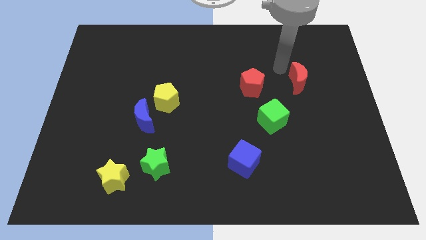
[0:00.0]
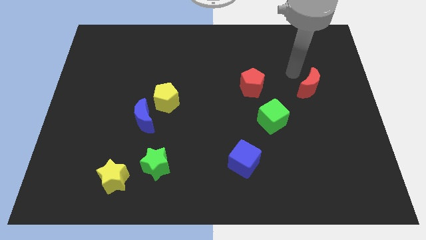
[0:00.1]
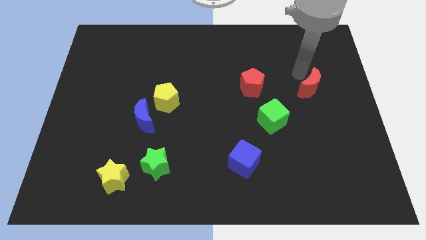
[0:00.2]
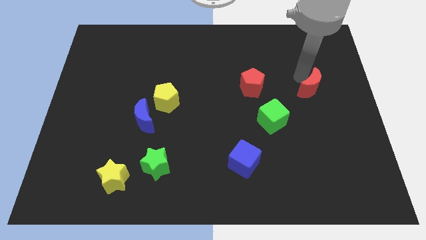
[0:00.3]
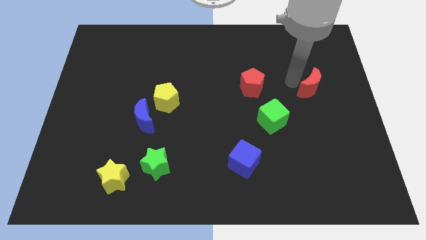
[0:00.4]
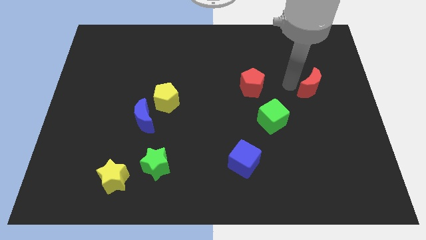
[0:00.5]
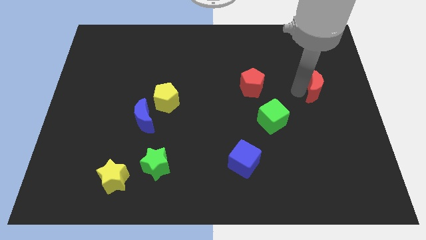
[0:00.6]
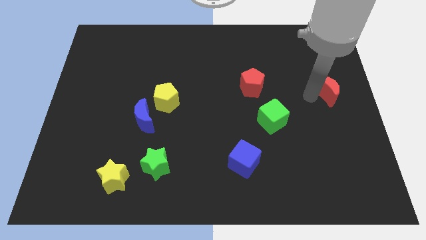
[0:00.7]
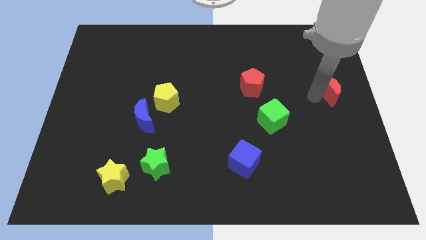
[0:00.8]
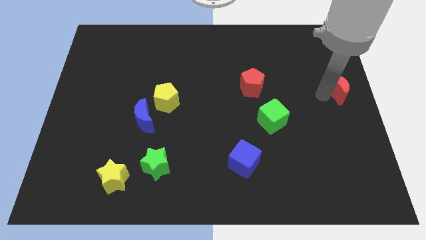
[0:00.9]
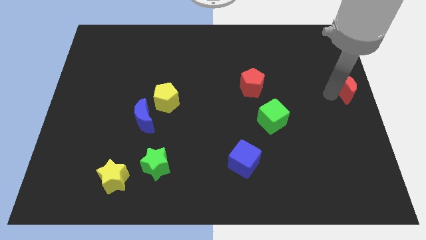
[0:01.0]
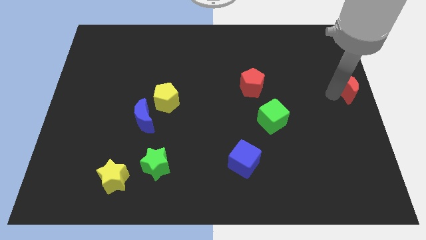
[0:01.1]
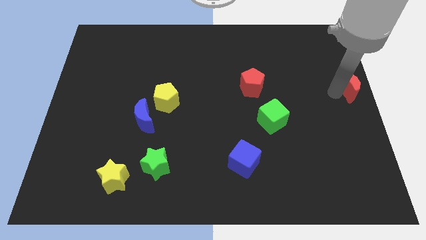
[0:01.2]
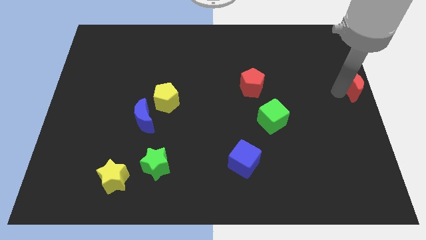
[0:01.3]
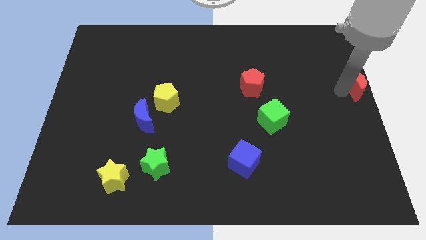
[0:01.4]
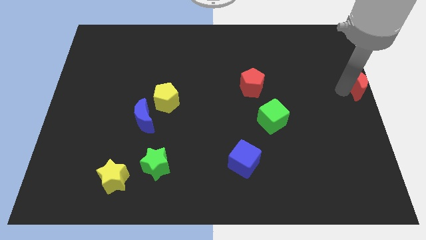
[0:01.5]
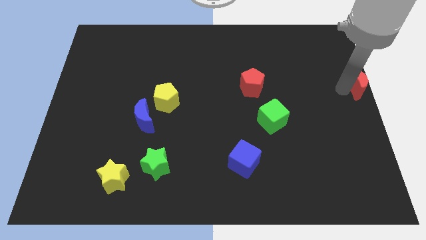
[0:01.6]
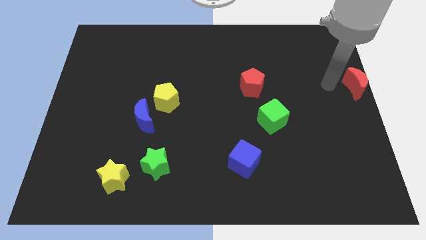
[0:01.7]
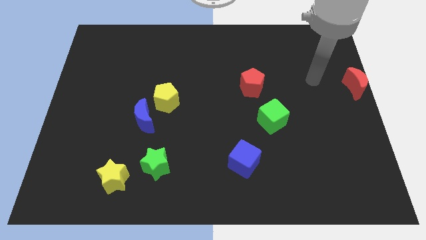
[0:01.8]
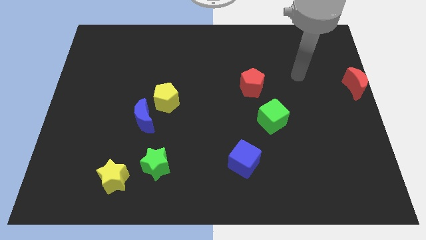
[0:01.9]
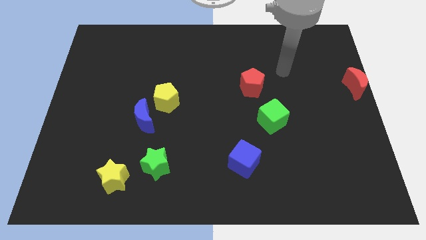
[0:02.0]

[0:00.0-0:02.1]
slide red moon to the center right

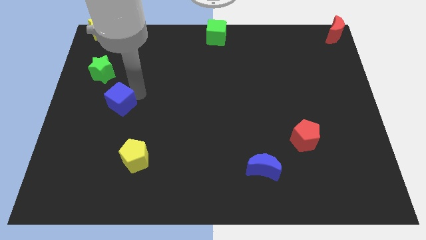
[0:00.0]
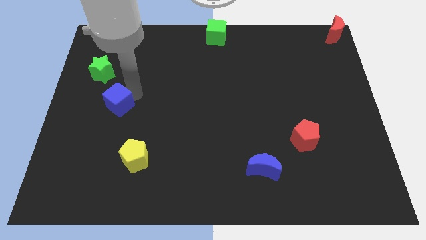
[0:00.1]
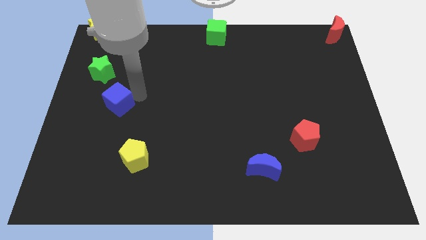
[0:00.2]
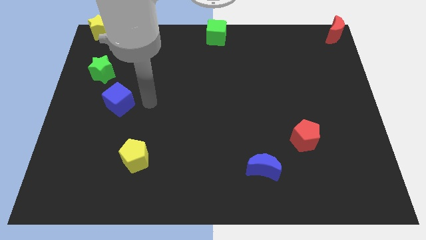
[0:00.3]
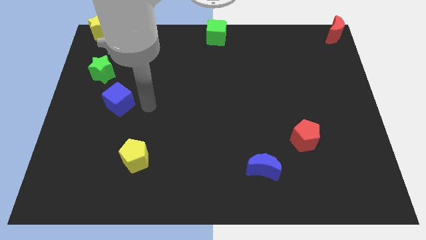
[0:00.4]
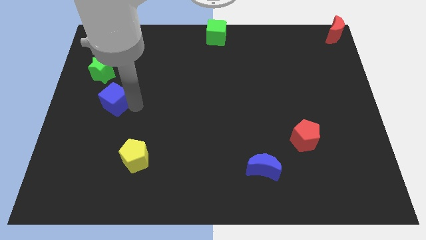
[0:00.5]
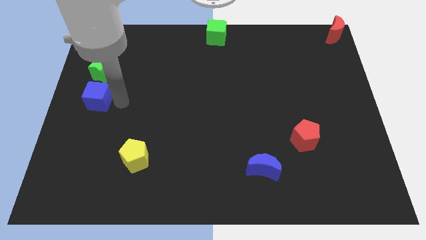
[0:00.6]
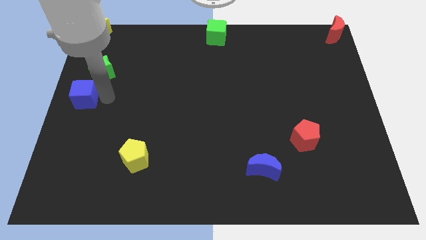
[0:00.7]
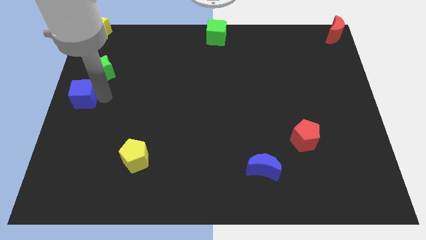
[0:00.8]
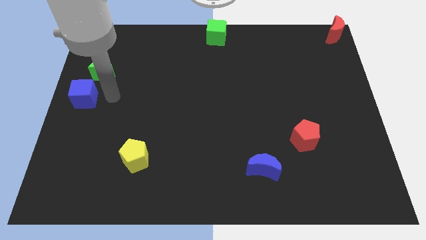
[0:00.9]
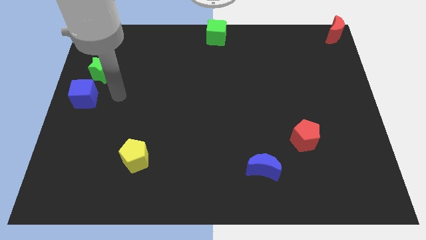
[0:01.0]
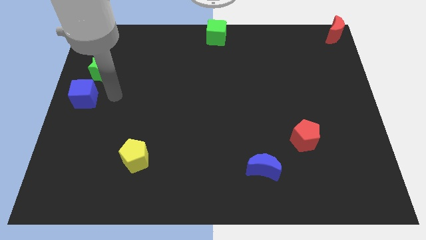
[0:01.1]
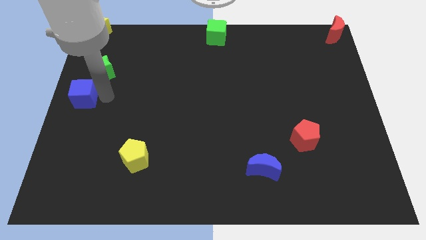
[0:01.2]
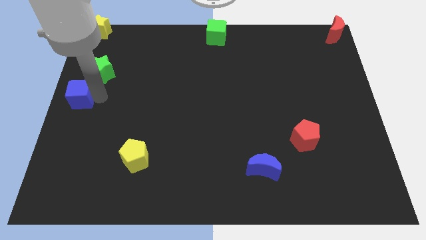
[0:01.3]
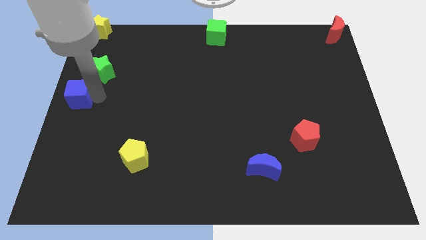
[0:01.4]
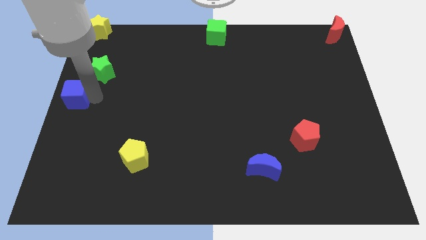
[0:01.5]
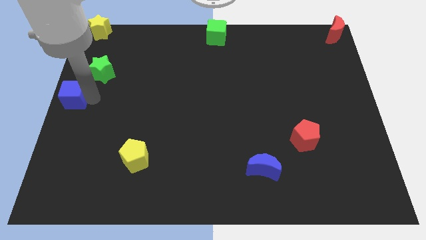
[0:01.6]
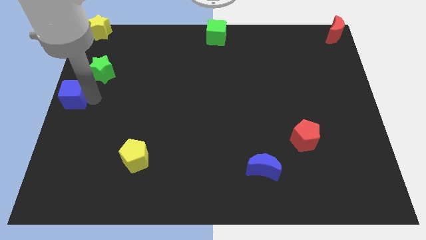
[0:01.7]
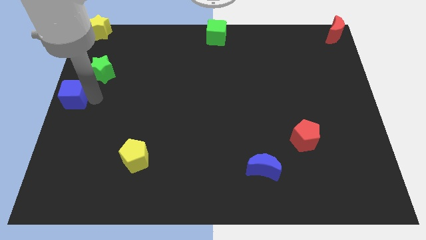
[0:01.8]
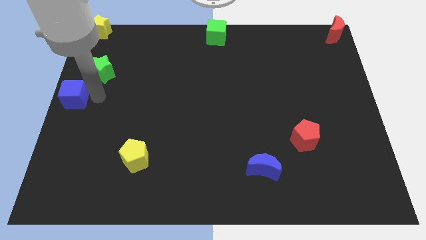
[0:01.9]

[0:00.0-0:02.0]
slide the blue cube to the center left of the board

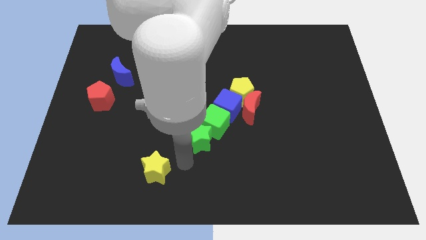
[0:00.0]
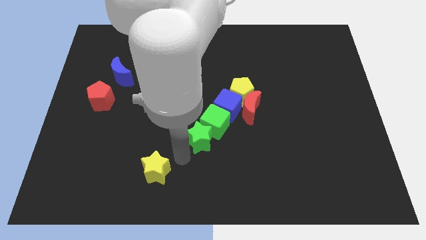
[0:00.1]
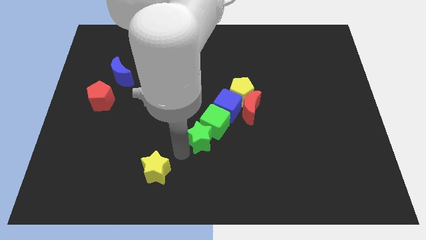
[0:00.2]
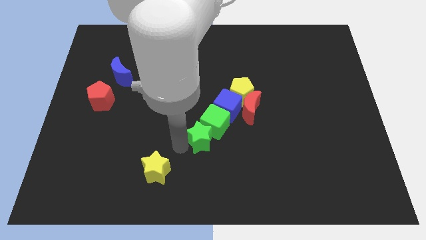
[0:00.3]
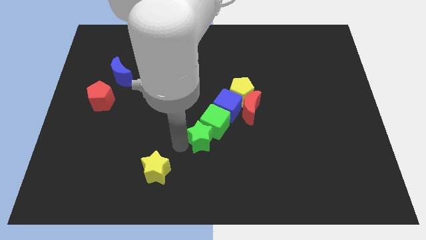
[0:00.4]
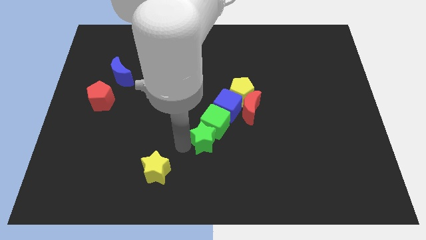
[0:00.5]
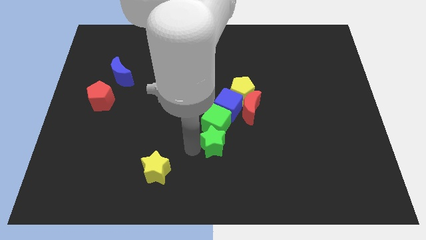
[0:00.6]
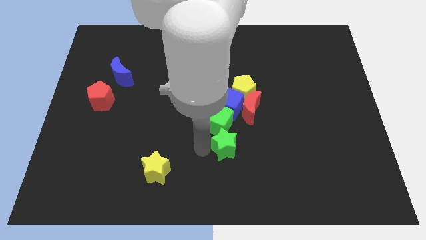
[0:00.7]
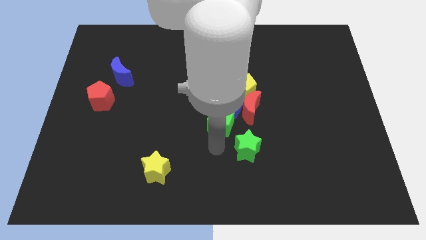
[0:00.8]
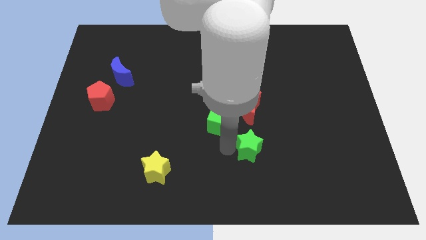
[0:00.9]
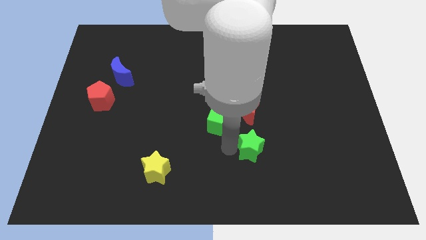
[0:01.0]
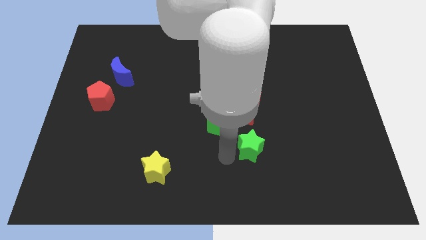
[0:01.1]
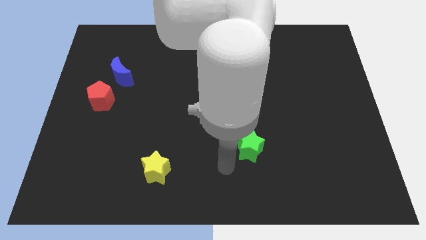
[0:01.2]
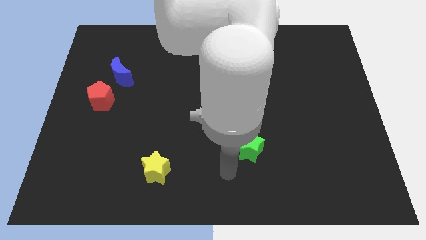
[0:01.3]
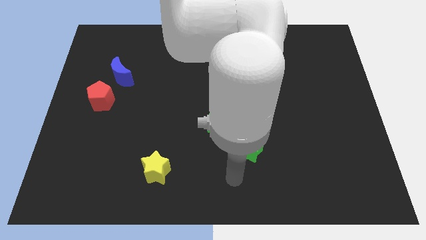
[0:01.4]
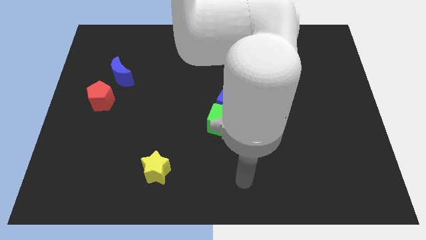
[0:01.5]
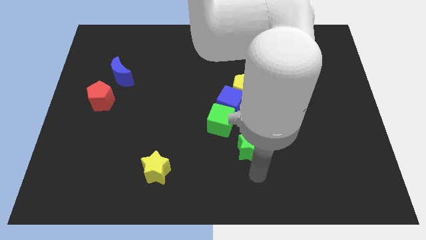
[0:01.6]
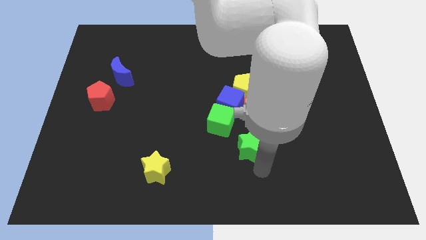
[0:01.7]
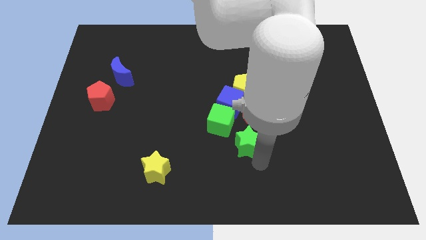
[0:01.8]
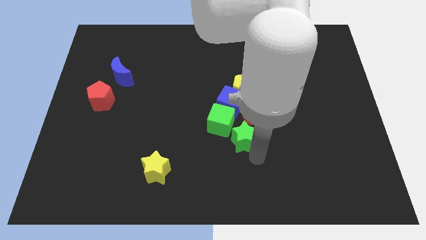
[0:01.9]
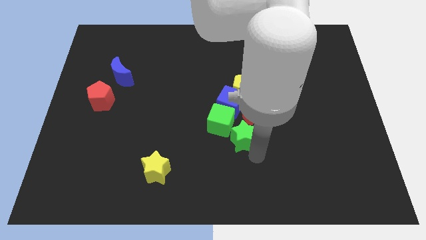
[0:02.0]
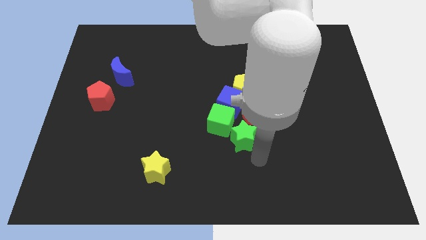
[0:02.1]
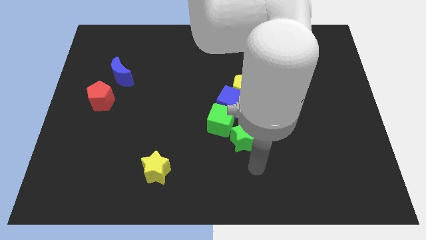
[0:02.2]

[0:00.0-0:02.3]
place the green star down to the red crescent

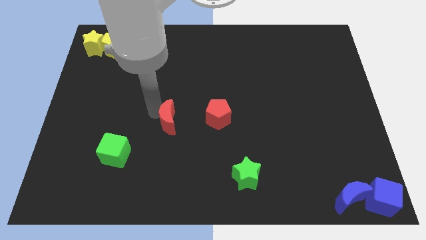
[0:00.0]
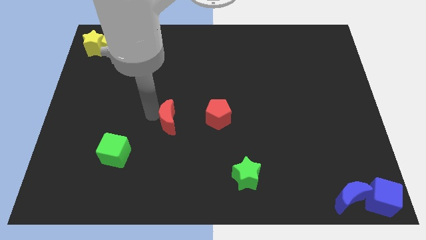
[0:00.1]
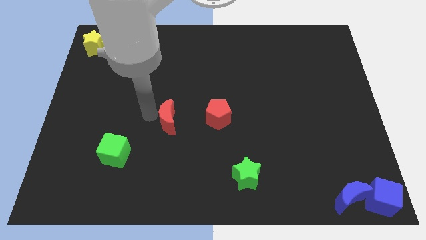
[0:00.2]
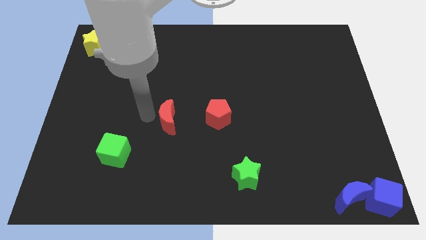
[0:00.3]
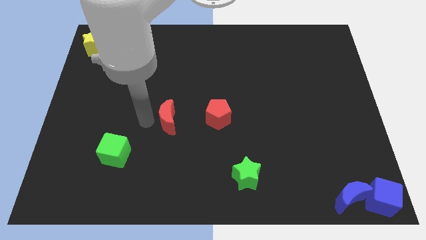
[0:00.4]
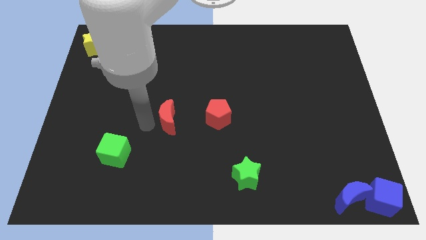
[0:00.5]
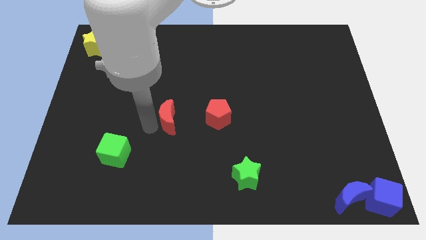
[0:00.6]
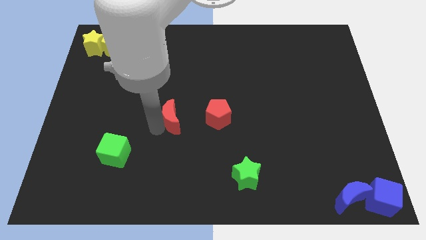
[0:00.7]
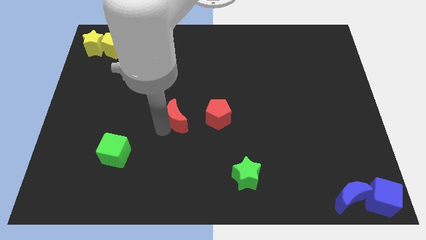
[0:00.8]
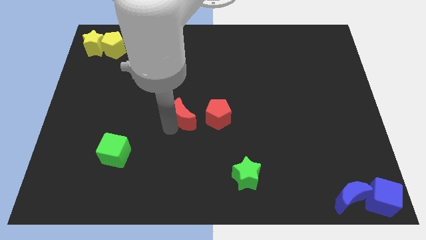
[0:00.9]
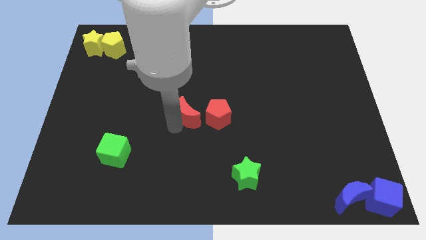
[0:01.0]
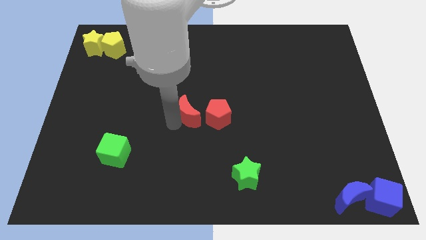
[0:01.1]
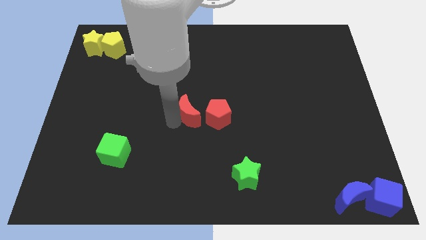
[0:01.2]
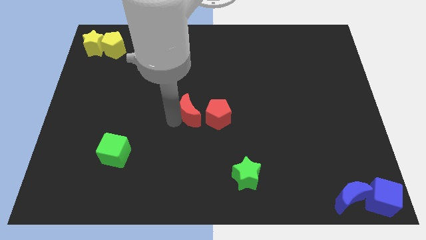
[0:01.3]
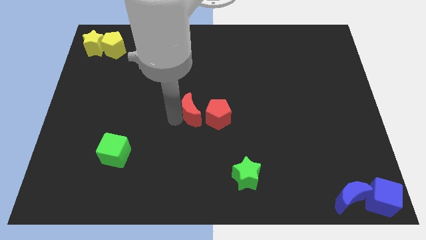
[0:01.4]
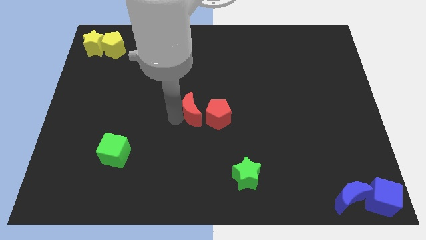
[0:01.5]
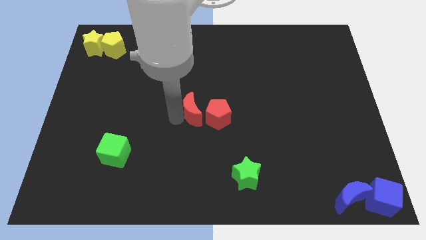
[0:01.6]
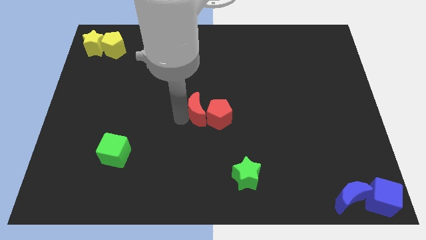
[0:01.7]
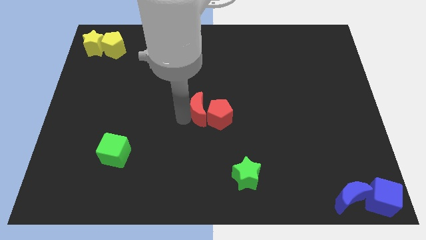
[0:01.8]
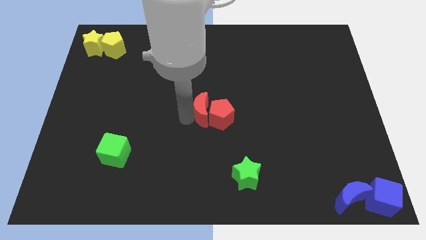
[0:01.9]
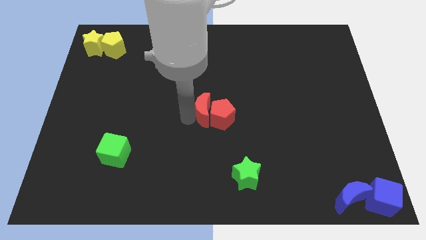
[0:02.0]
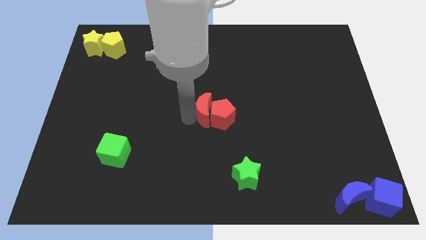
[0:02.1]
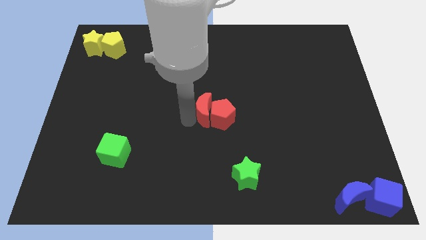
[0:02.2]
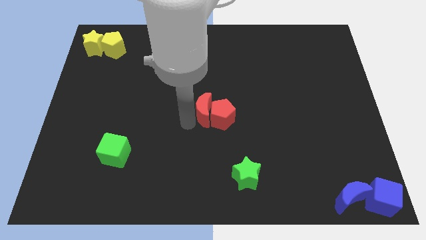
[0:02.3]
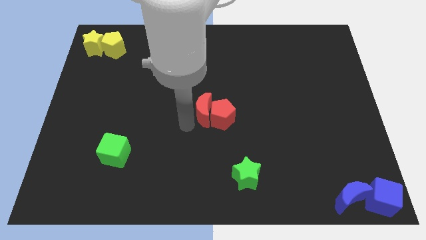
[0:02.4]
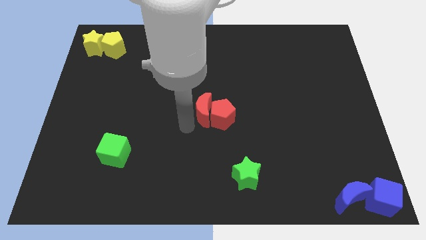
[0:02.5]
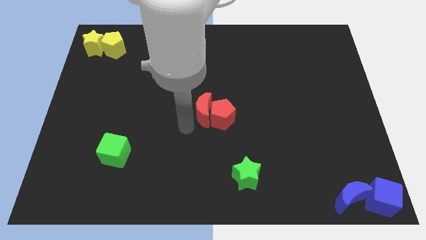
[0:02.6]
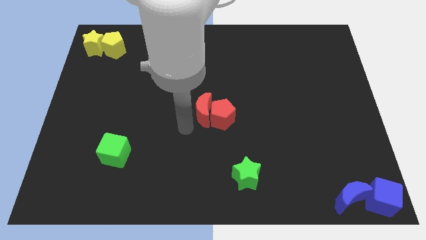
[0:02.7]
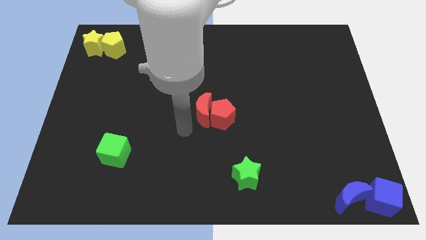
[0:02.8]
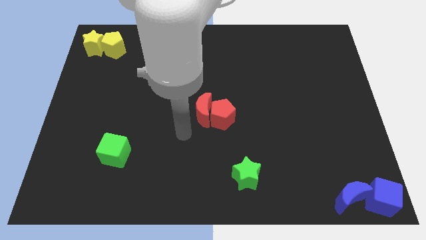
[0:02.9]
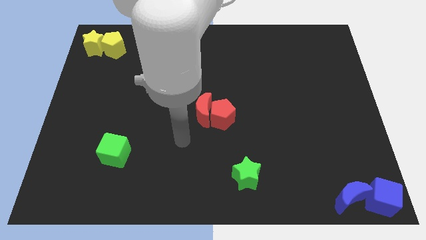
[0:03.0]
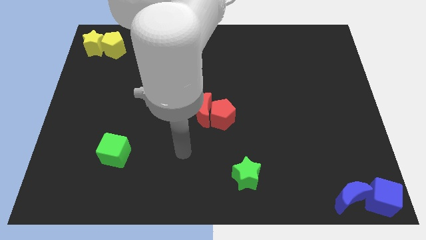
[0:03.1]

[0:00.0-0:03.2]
push red moon towards red pentagon
